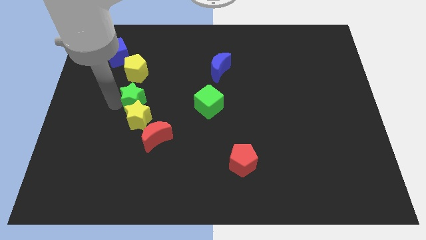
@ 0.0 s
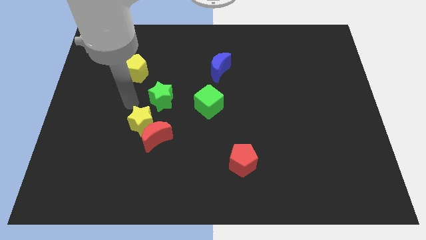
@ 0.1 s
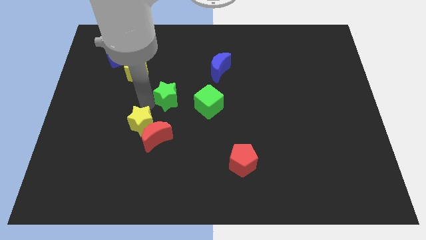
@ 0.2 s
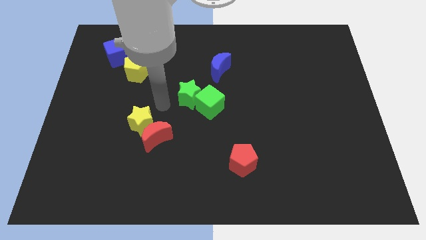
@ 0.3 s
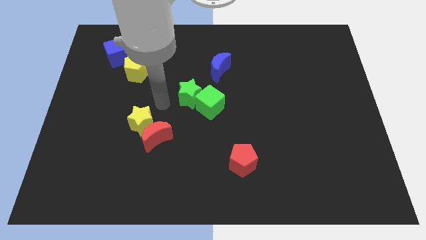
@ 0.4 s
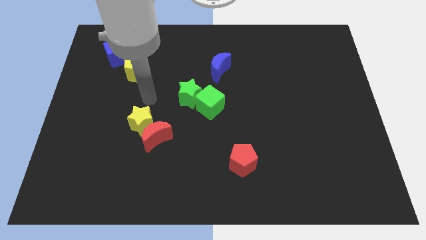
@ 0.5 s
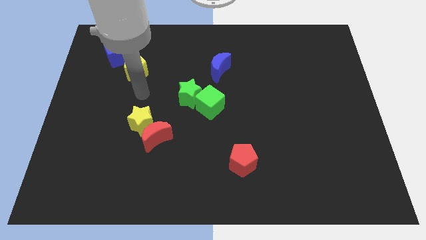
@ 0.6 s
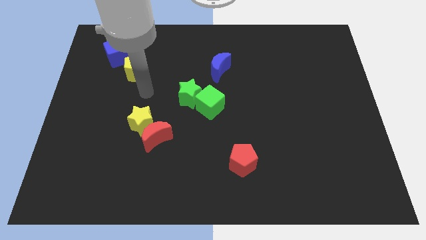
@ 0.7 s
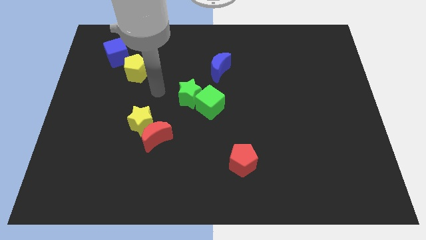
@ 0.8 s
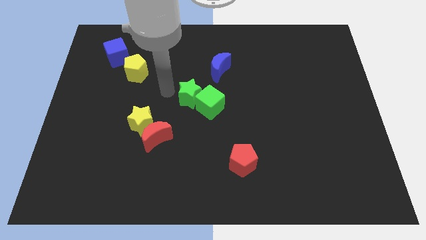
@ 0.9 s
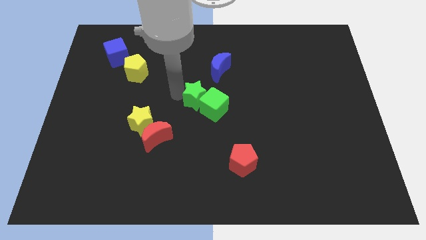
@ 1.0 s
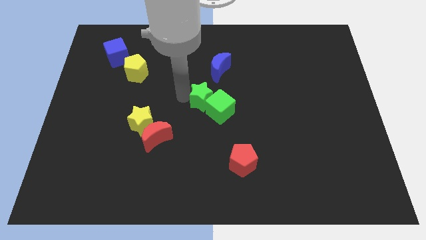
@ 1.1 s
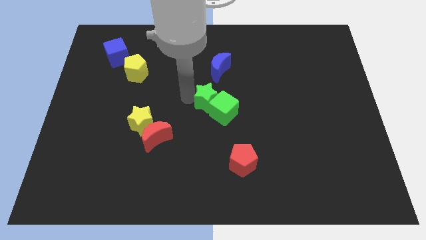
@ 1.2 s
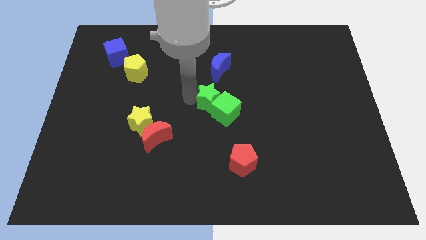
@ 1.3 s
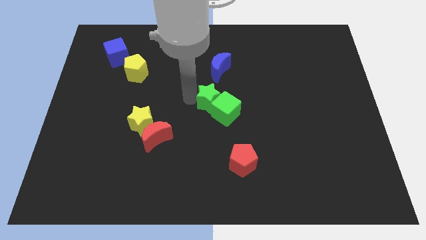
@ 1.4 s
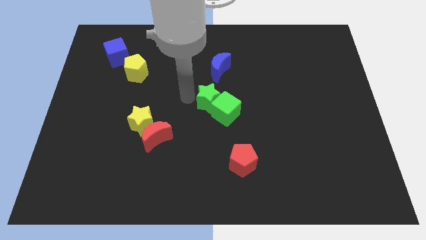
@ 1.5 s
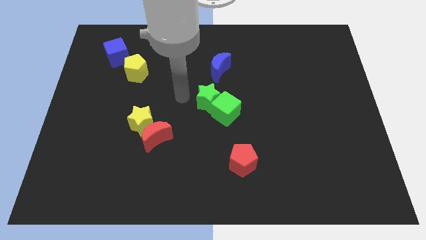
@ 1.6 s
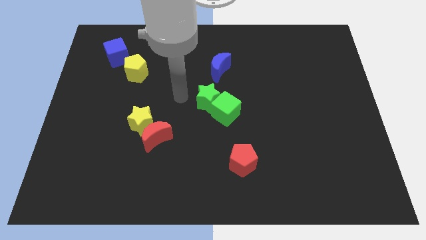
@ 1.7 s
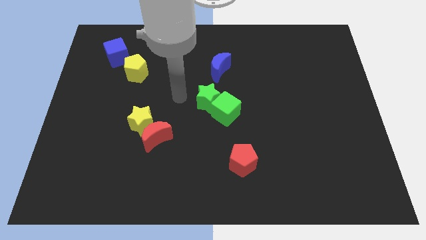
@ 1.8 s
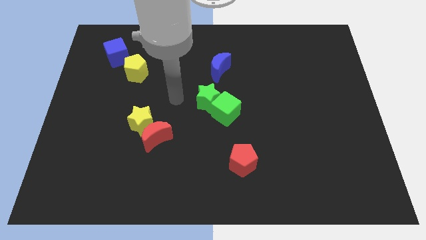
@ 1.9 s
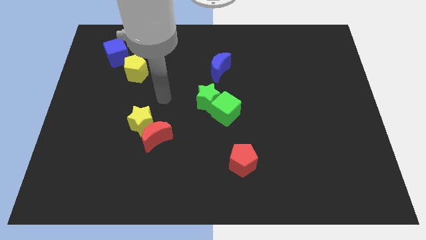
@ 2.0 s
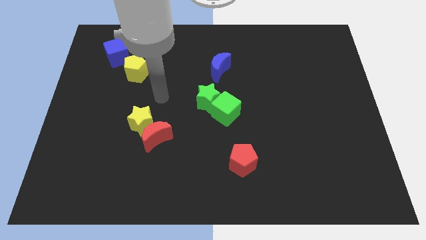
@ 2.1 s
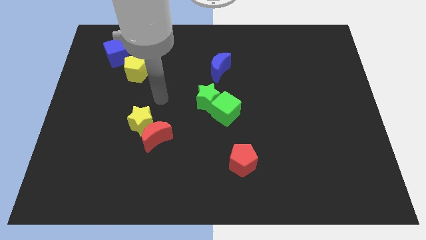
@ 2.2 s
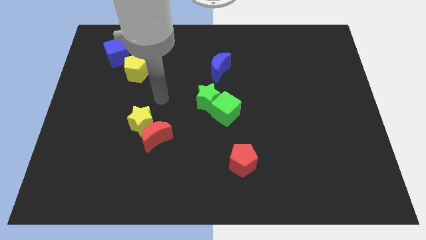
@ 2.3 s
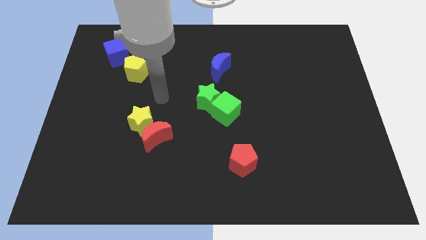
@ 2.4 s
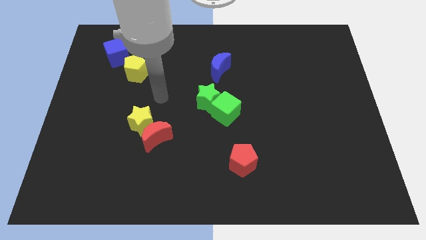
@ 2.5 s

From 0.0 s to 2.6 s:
push the green star into the green cube

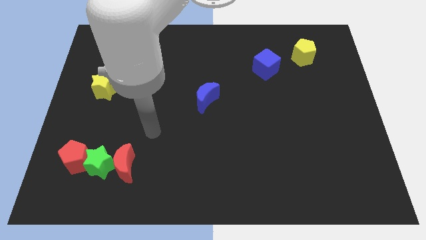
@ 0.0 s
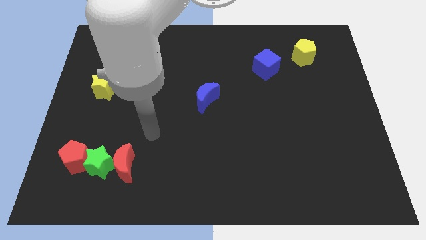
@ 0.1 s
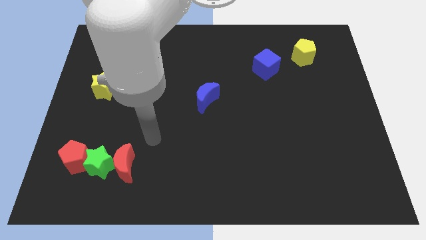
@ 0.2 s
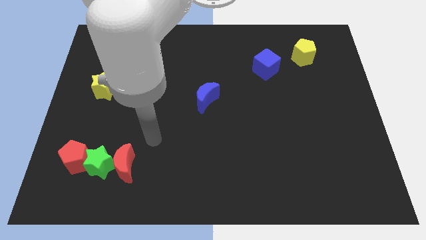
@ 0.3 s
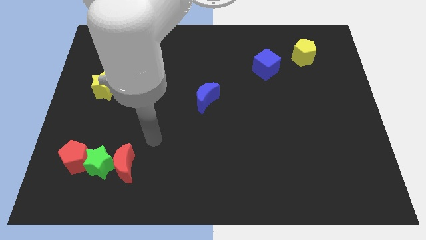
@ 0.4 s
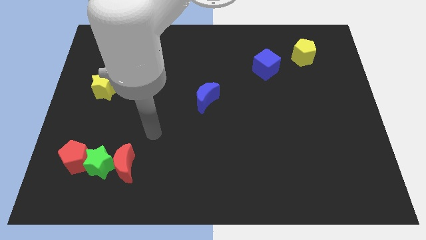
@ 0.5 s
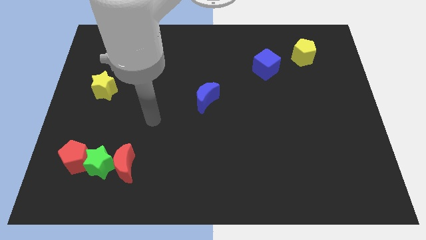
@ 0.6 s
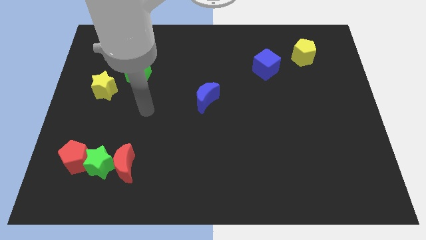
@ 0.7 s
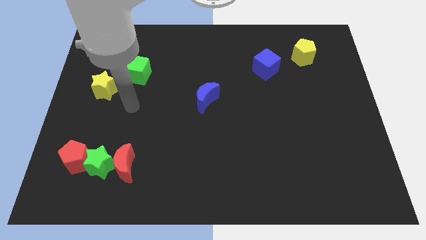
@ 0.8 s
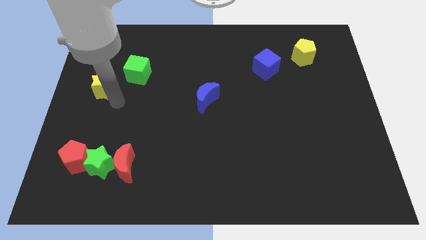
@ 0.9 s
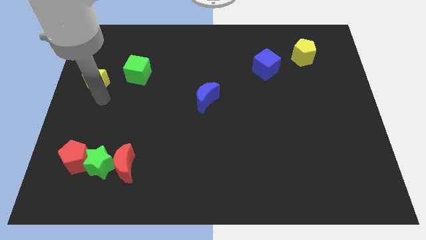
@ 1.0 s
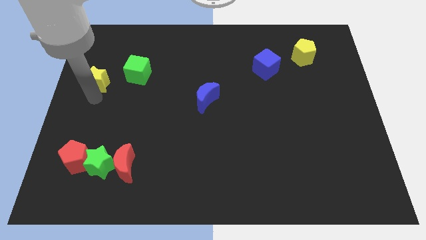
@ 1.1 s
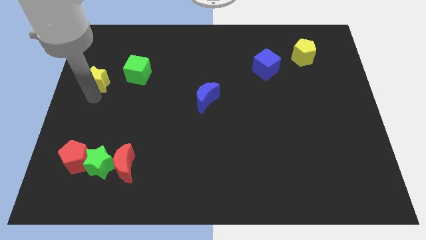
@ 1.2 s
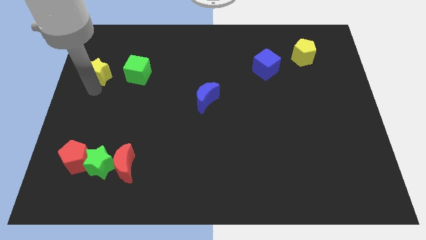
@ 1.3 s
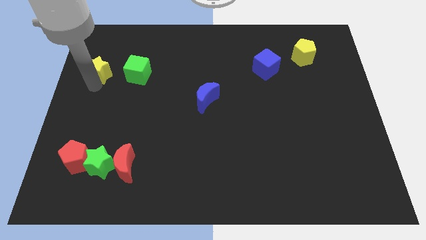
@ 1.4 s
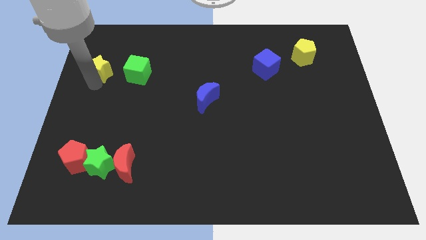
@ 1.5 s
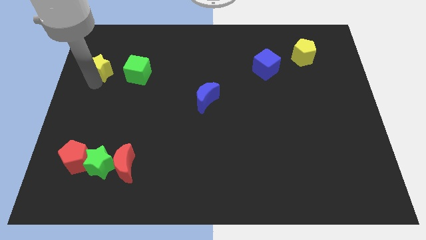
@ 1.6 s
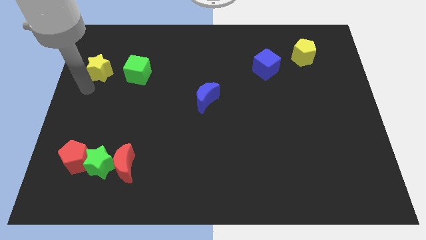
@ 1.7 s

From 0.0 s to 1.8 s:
push the yellow star slightly up

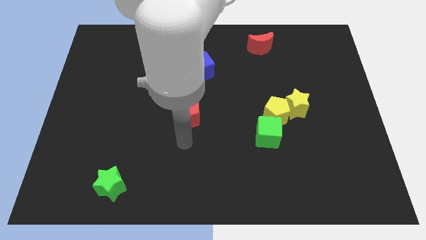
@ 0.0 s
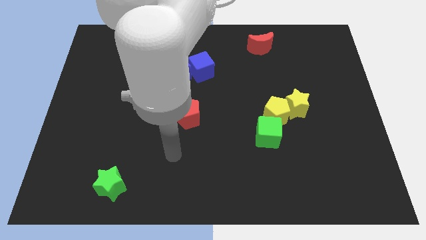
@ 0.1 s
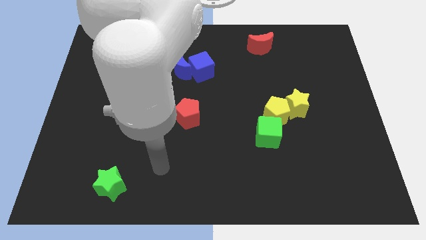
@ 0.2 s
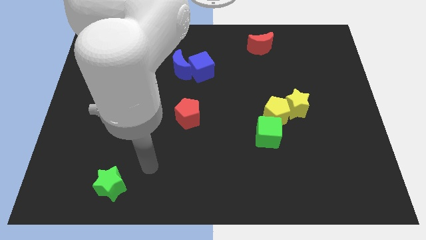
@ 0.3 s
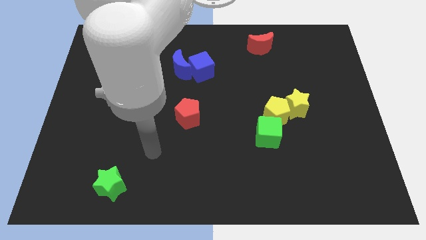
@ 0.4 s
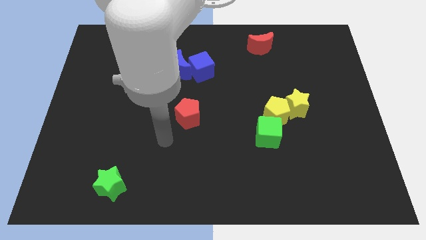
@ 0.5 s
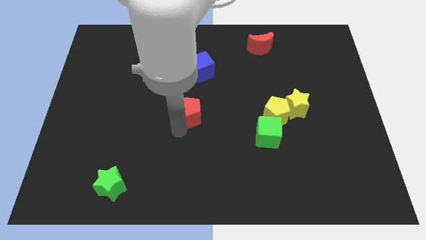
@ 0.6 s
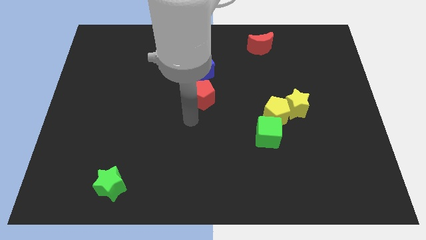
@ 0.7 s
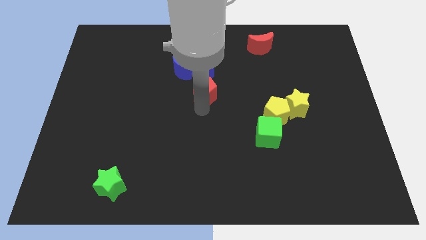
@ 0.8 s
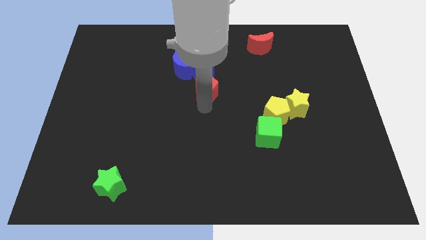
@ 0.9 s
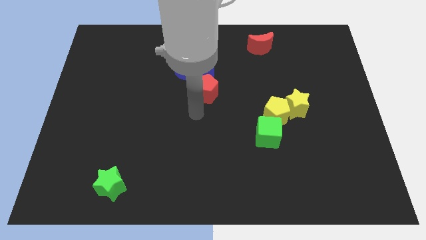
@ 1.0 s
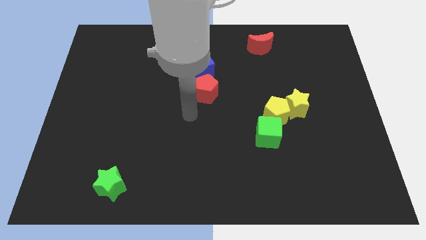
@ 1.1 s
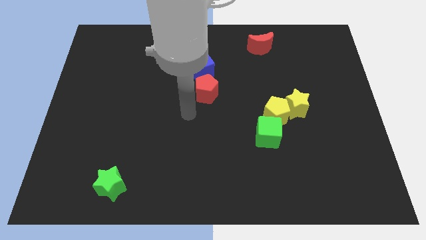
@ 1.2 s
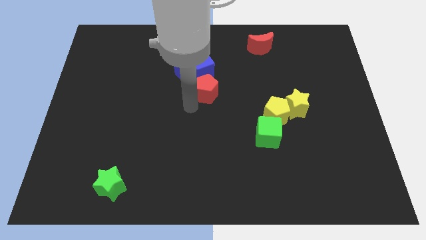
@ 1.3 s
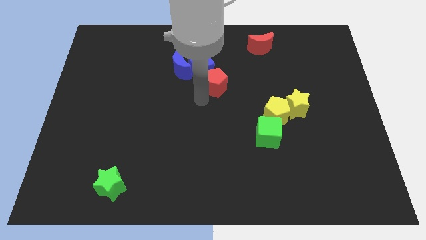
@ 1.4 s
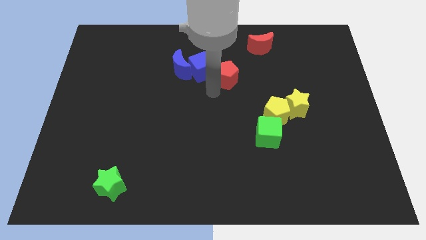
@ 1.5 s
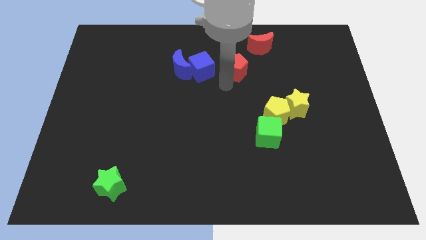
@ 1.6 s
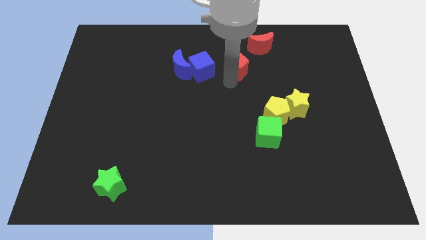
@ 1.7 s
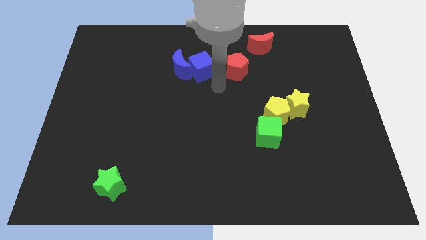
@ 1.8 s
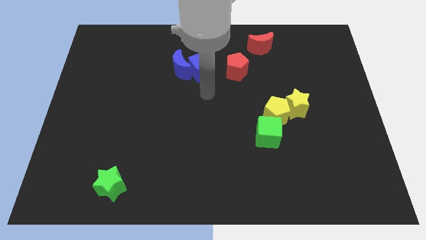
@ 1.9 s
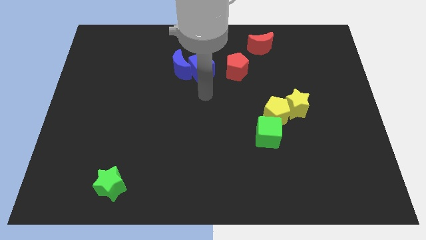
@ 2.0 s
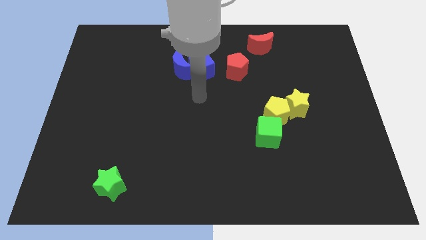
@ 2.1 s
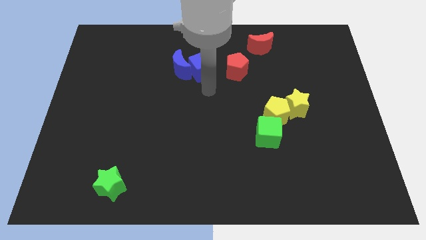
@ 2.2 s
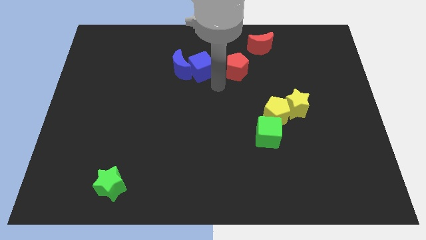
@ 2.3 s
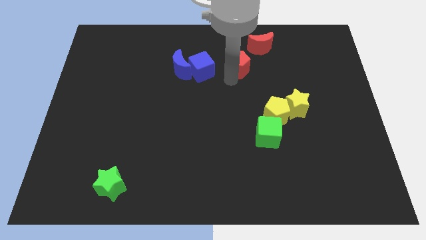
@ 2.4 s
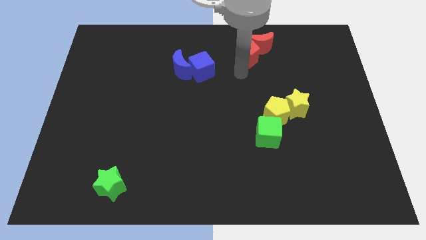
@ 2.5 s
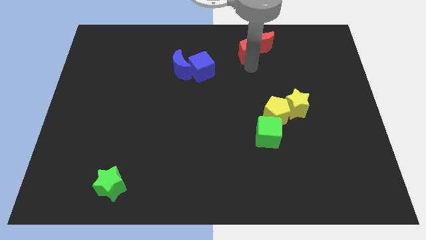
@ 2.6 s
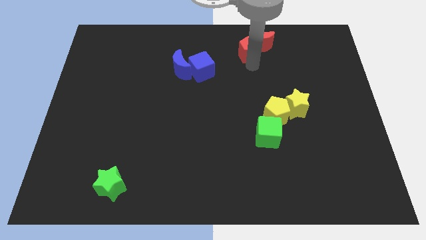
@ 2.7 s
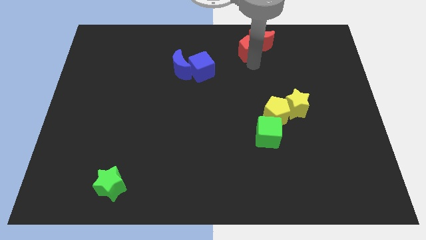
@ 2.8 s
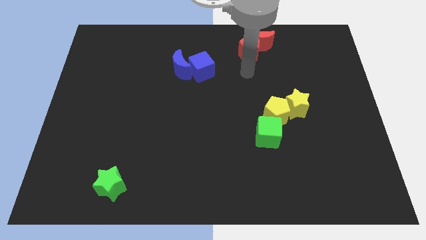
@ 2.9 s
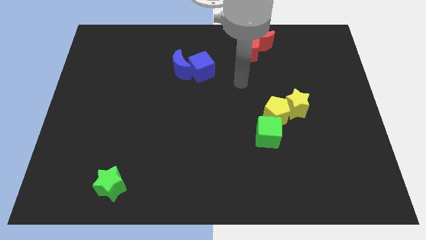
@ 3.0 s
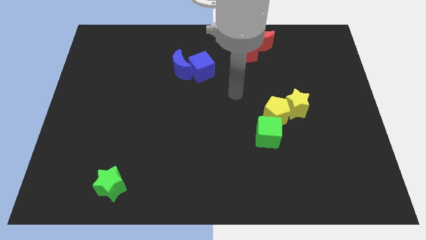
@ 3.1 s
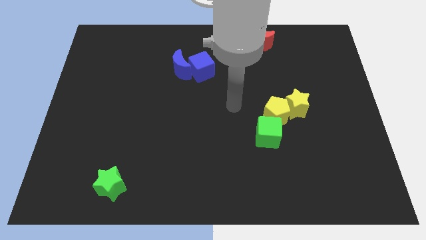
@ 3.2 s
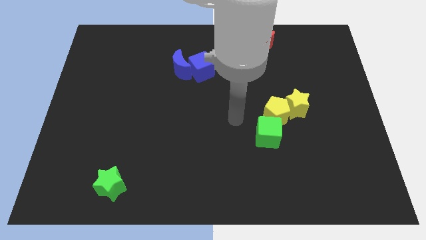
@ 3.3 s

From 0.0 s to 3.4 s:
slide the red pentagon into the red moon

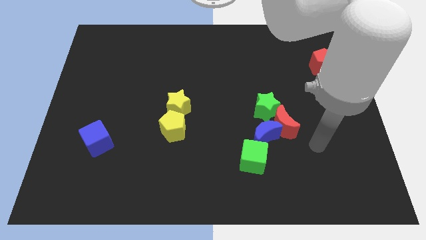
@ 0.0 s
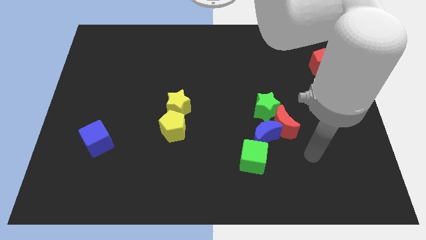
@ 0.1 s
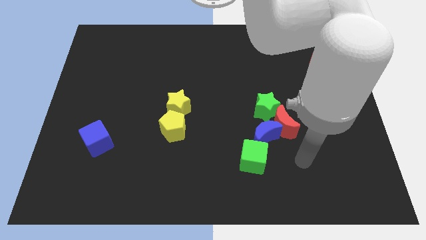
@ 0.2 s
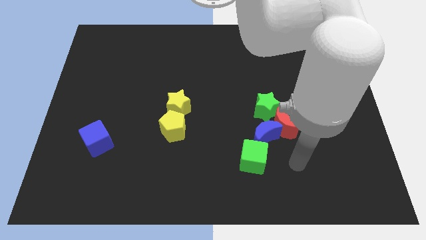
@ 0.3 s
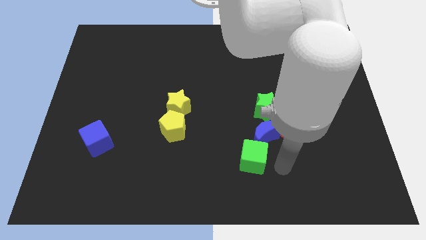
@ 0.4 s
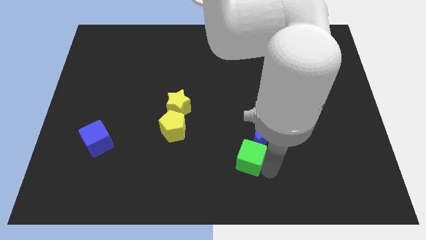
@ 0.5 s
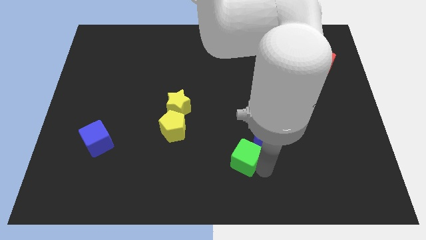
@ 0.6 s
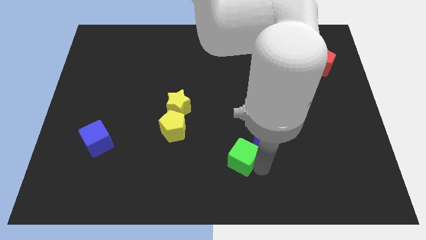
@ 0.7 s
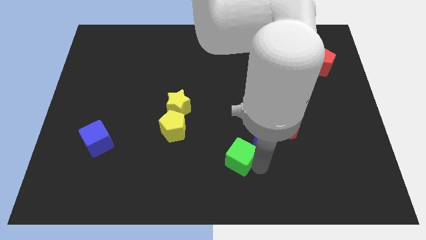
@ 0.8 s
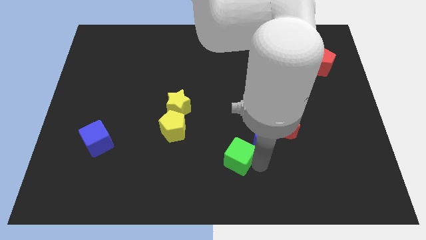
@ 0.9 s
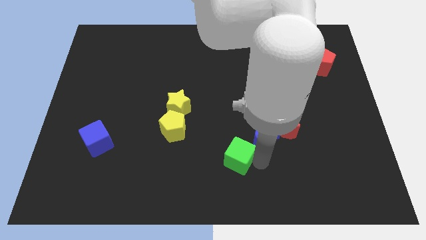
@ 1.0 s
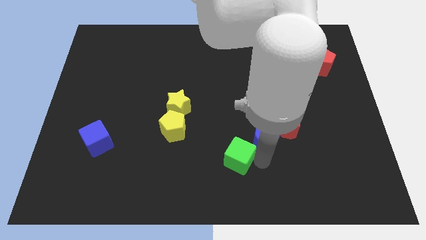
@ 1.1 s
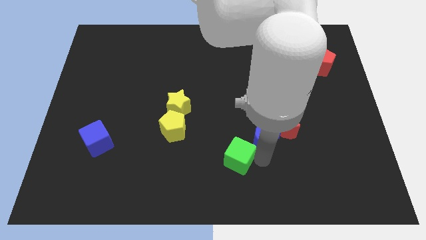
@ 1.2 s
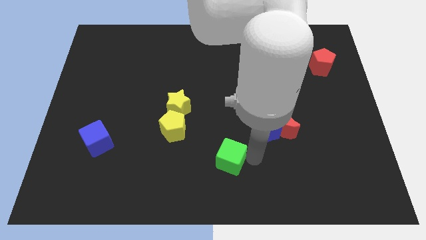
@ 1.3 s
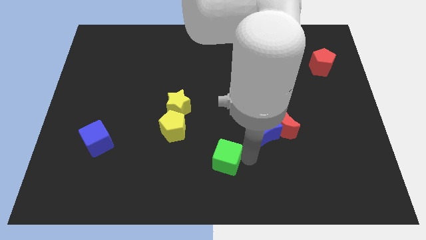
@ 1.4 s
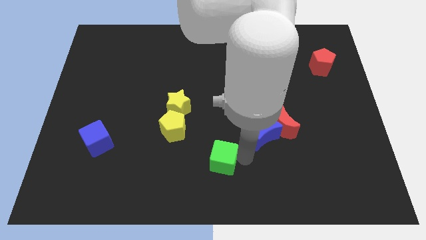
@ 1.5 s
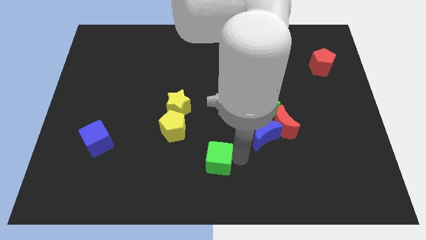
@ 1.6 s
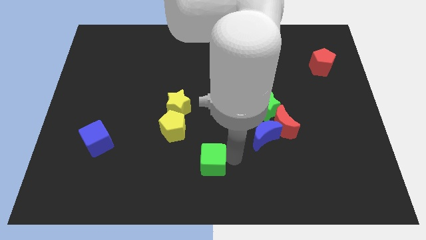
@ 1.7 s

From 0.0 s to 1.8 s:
move the green cube away from the blue crescent
